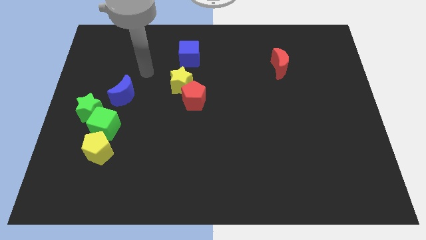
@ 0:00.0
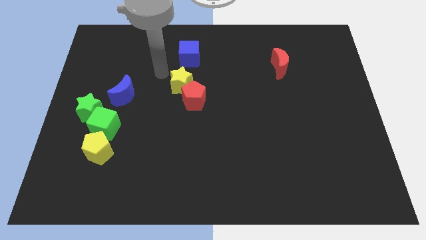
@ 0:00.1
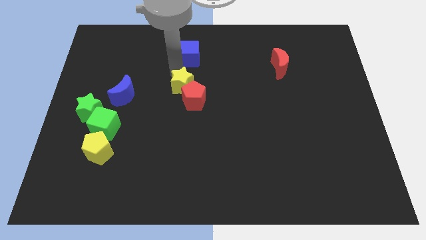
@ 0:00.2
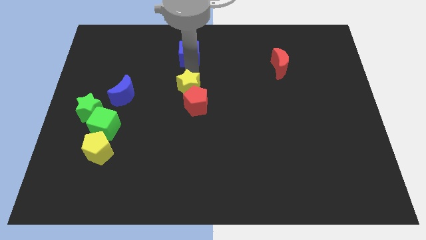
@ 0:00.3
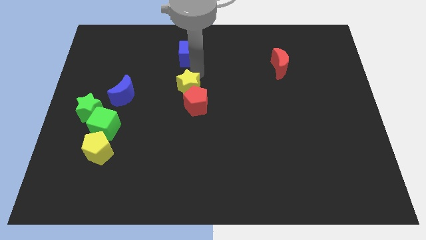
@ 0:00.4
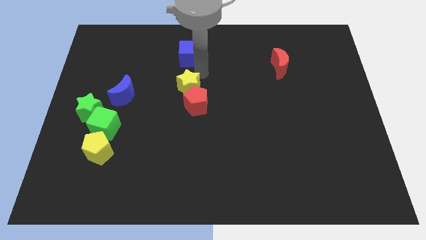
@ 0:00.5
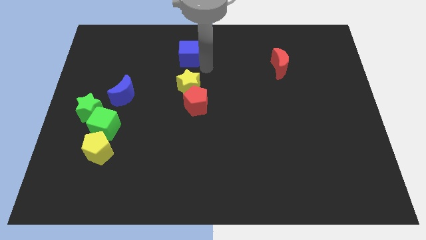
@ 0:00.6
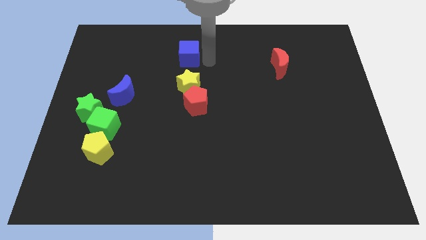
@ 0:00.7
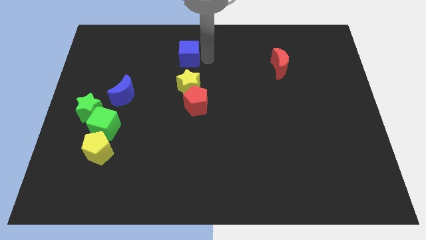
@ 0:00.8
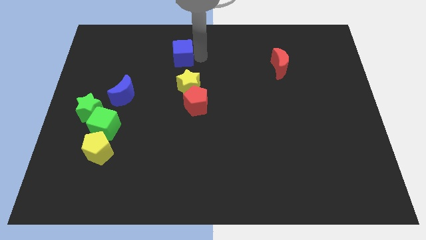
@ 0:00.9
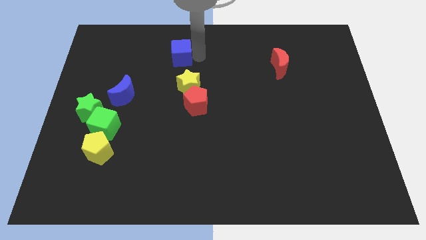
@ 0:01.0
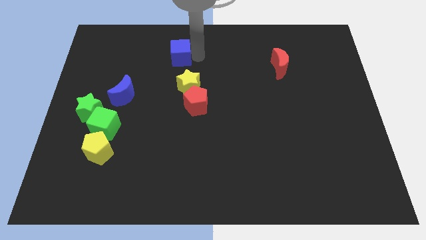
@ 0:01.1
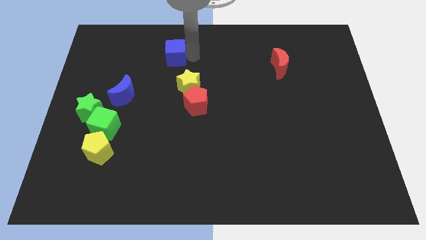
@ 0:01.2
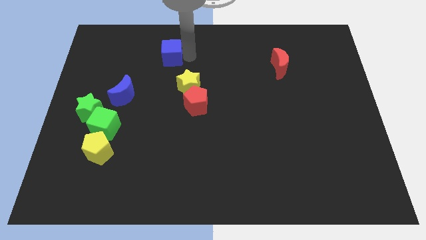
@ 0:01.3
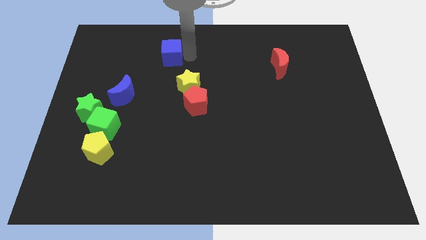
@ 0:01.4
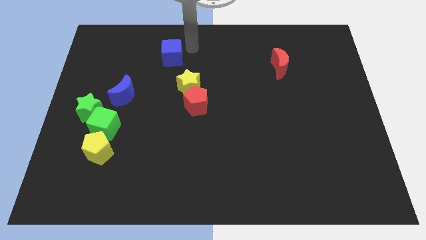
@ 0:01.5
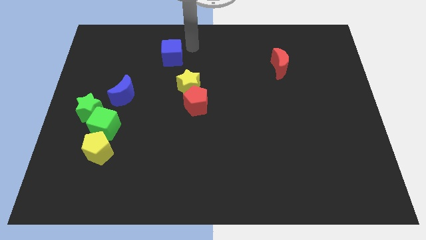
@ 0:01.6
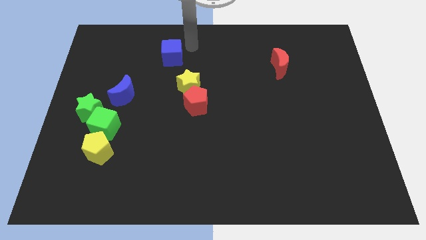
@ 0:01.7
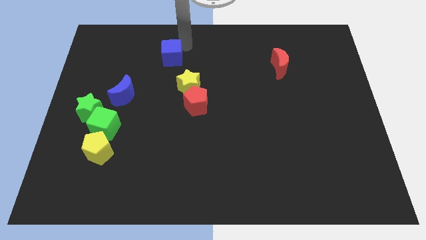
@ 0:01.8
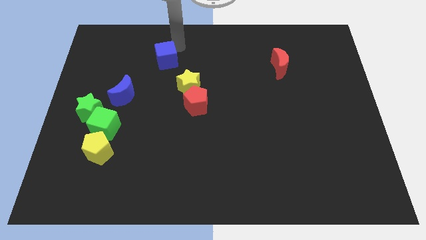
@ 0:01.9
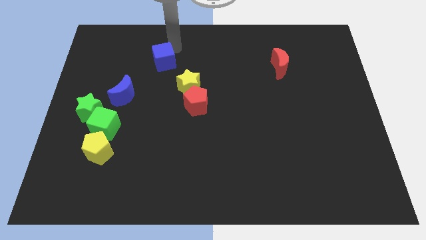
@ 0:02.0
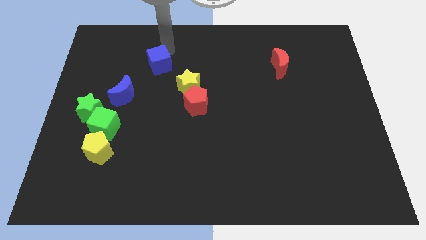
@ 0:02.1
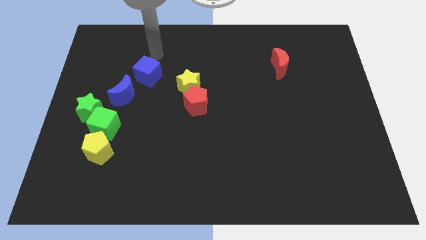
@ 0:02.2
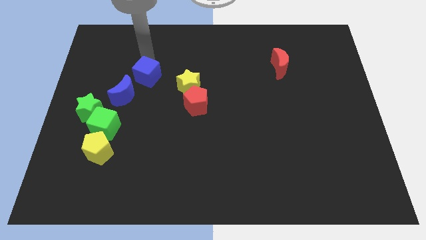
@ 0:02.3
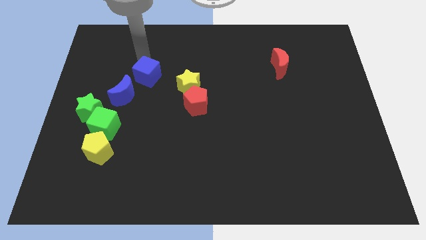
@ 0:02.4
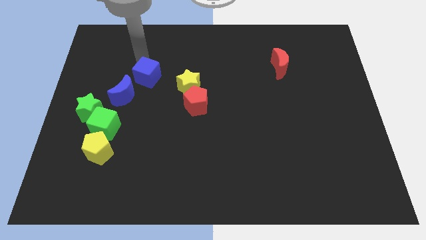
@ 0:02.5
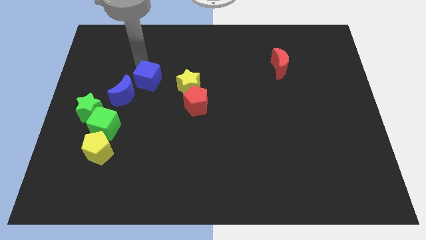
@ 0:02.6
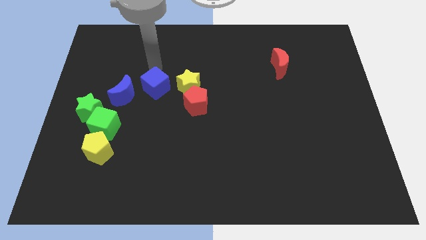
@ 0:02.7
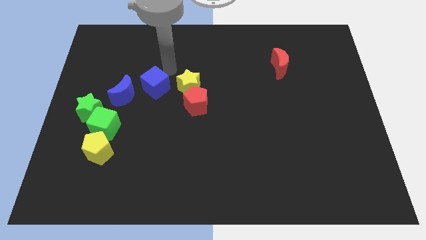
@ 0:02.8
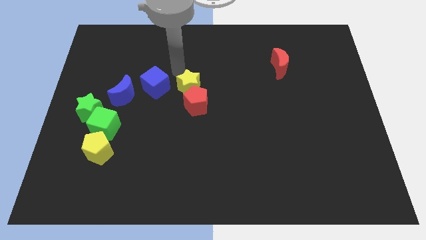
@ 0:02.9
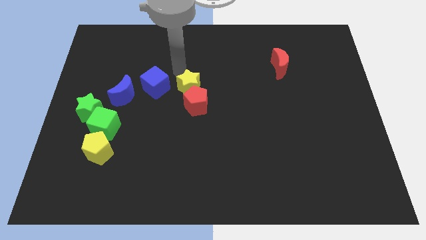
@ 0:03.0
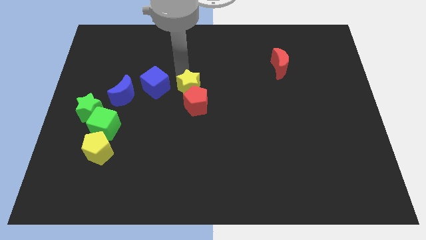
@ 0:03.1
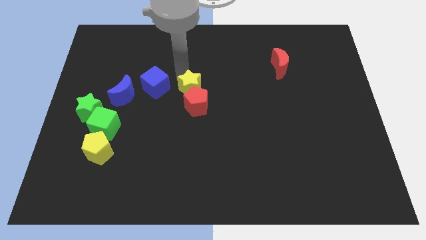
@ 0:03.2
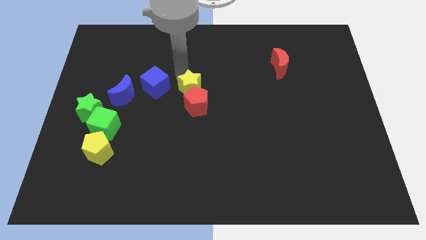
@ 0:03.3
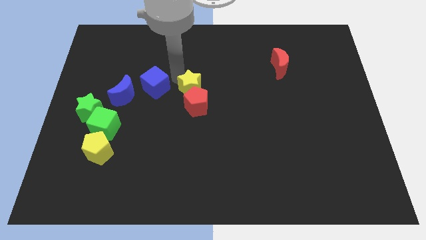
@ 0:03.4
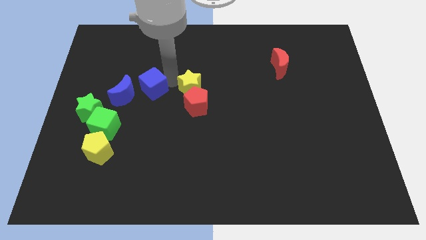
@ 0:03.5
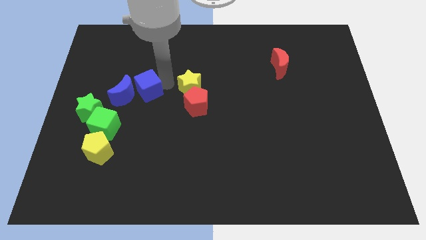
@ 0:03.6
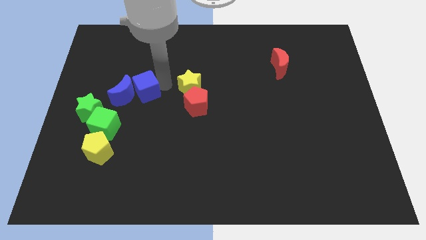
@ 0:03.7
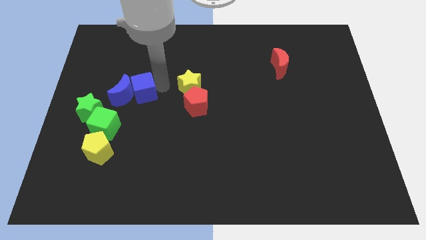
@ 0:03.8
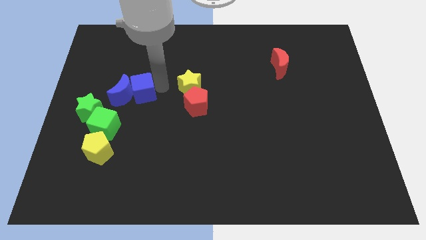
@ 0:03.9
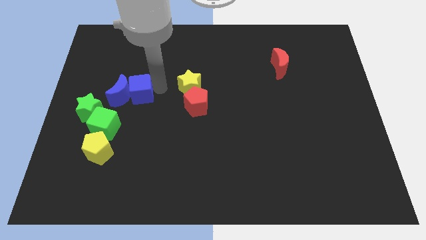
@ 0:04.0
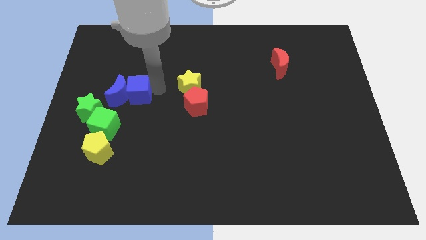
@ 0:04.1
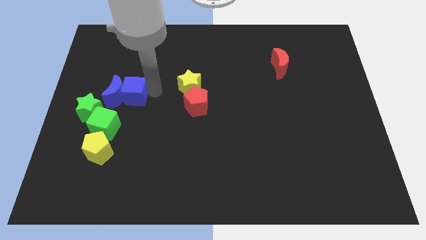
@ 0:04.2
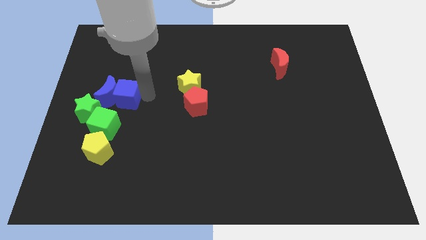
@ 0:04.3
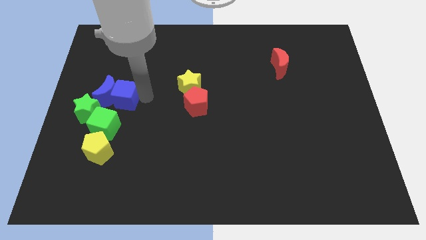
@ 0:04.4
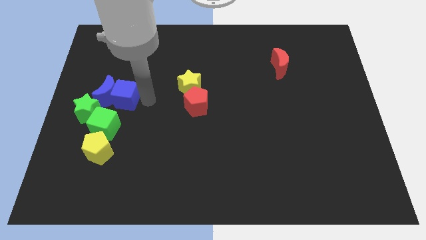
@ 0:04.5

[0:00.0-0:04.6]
push the blue cube into the blue crescent

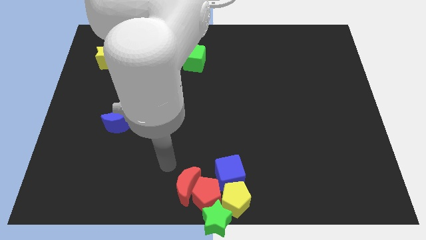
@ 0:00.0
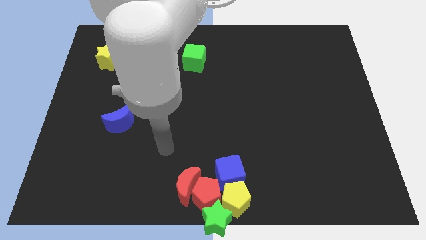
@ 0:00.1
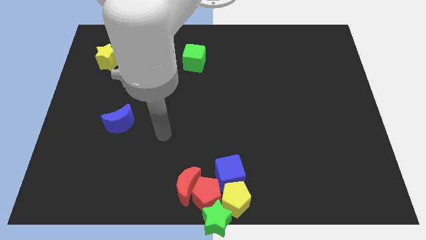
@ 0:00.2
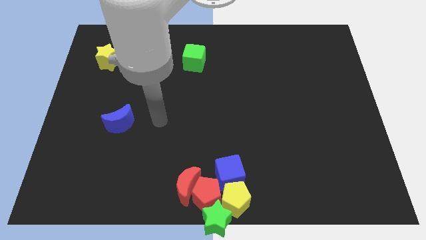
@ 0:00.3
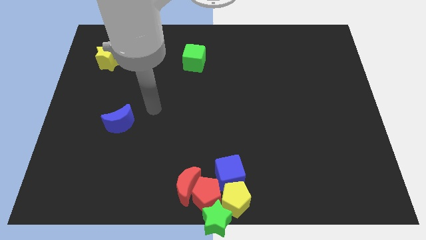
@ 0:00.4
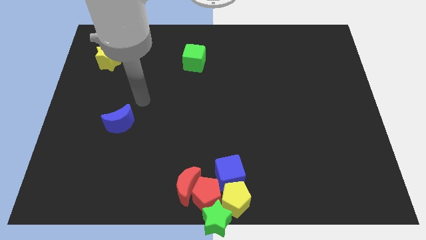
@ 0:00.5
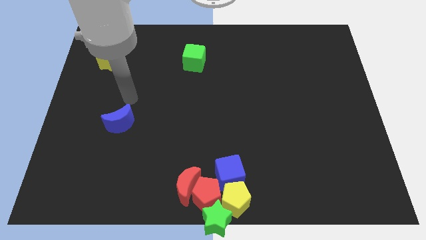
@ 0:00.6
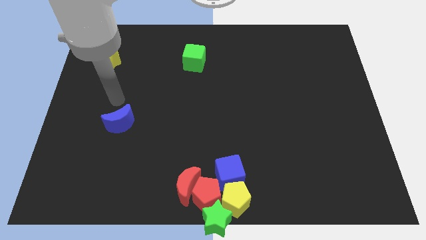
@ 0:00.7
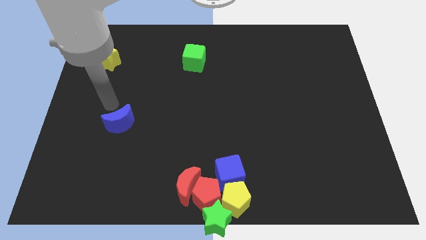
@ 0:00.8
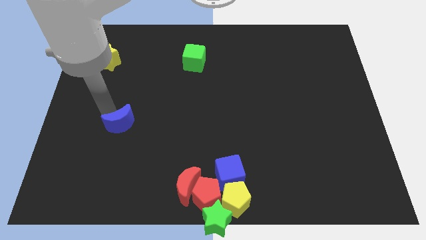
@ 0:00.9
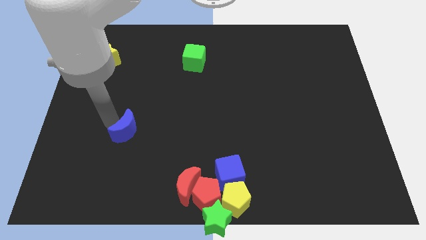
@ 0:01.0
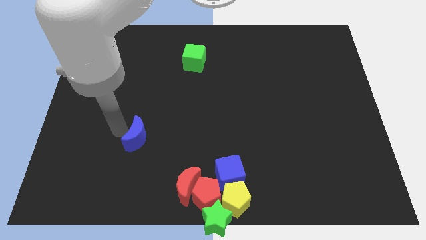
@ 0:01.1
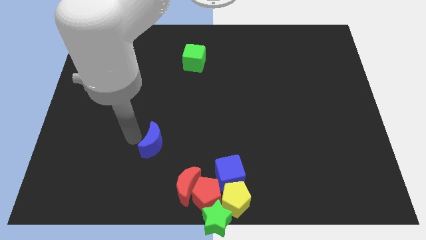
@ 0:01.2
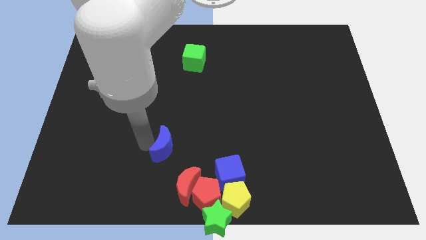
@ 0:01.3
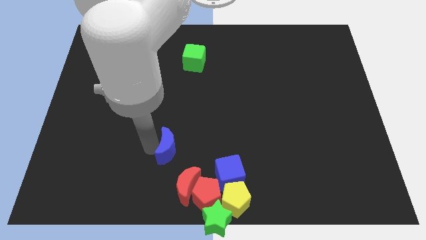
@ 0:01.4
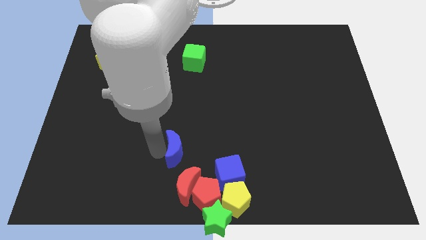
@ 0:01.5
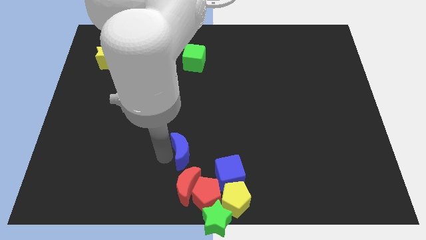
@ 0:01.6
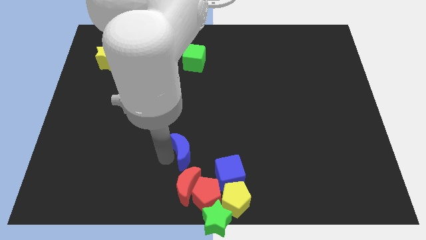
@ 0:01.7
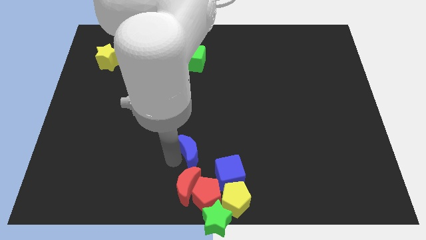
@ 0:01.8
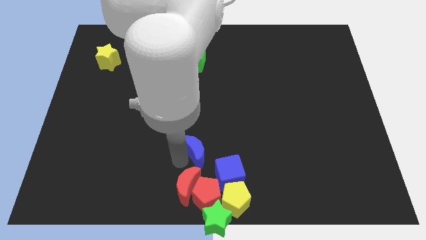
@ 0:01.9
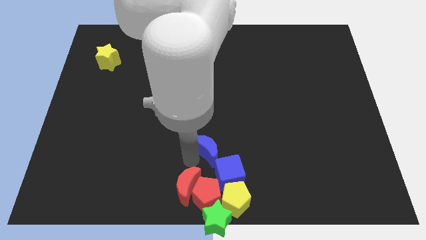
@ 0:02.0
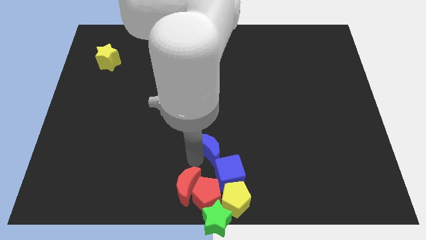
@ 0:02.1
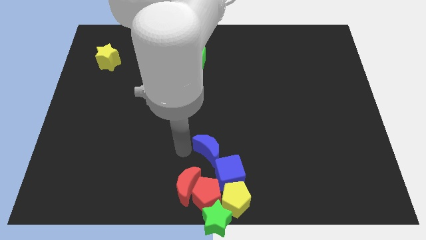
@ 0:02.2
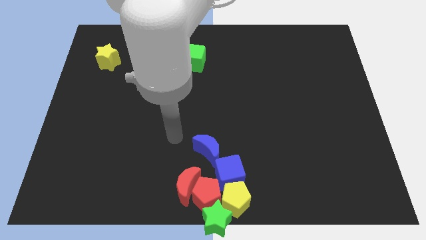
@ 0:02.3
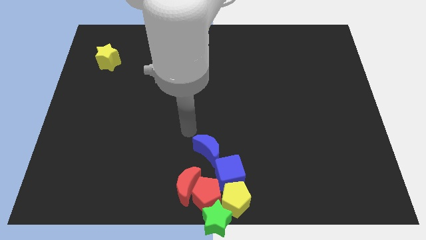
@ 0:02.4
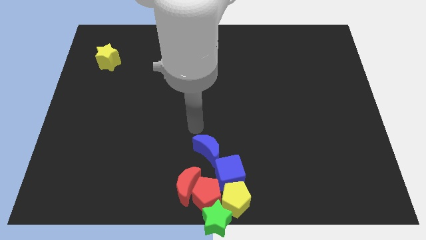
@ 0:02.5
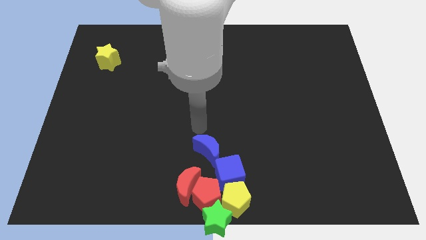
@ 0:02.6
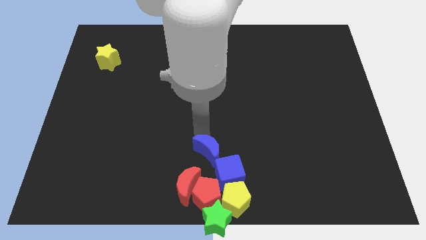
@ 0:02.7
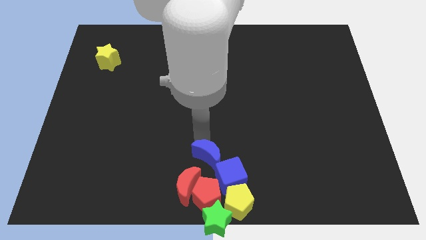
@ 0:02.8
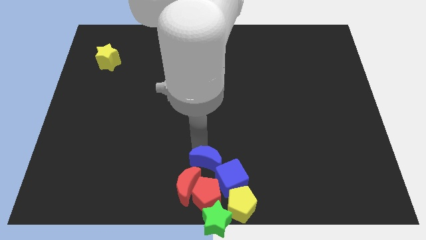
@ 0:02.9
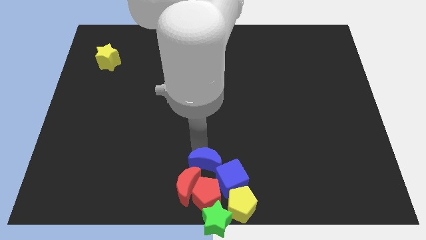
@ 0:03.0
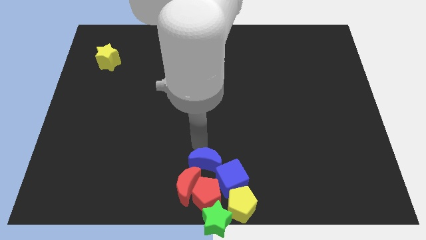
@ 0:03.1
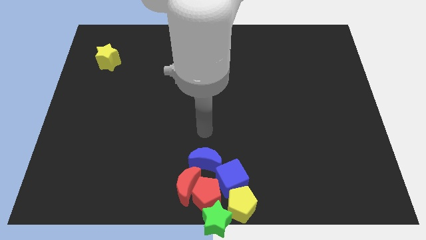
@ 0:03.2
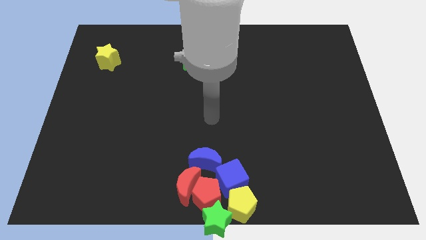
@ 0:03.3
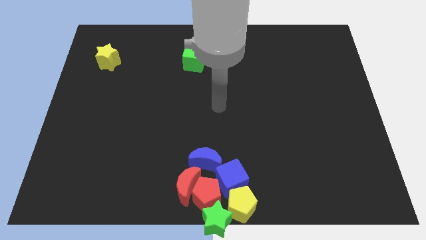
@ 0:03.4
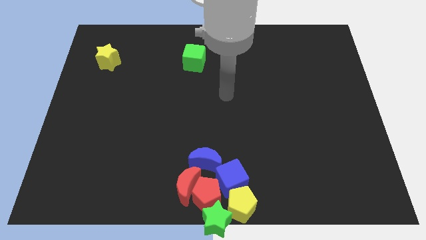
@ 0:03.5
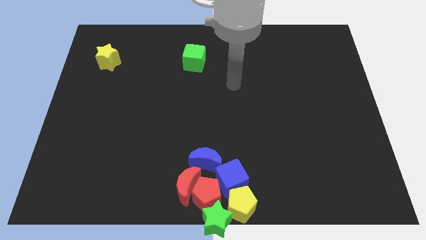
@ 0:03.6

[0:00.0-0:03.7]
push the blue moon into the blue cube

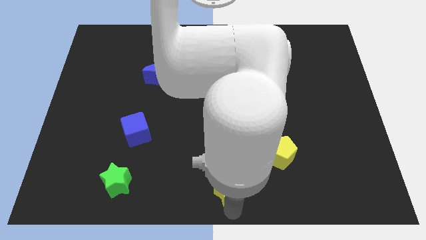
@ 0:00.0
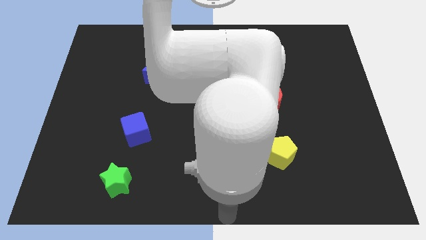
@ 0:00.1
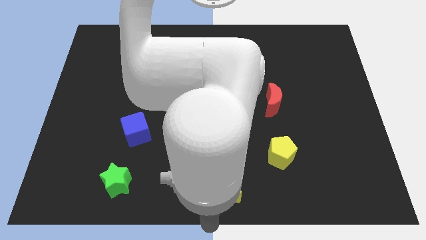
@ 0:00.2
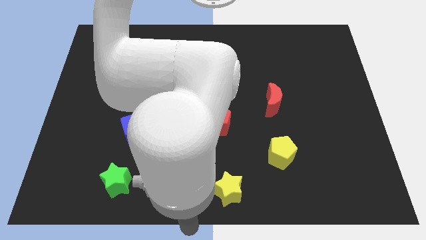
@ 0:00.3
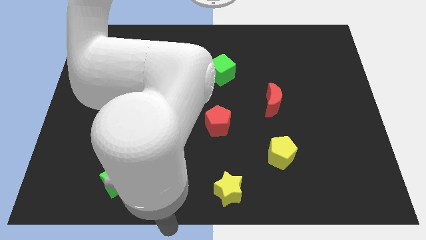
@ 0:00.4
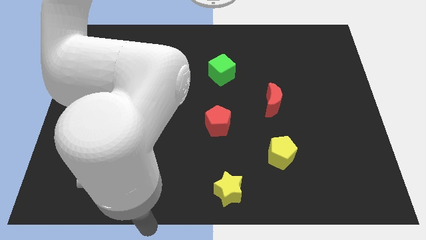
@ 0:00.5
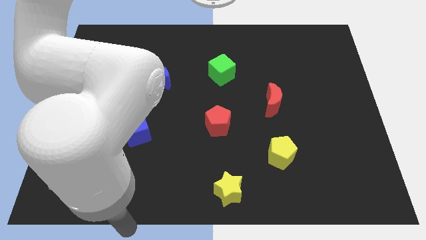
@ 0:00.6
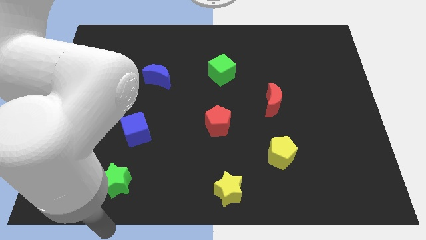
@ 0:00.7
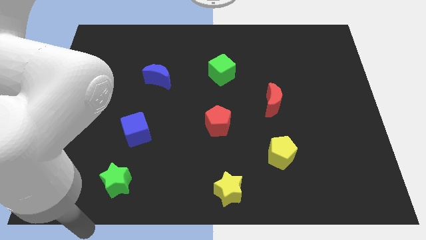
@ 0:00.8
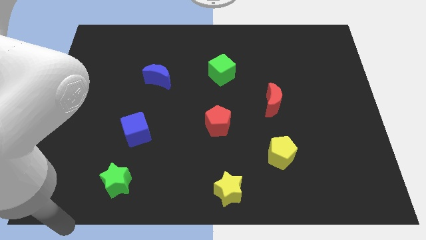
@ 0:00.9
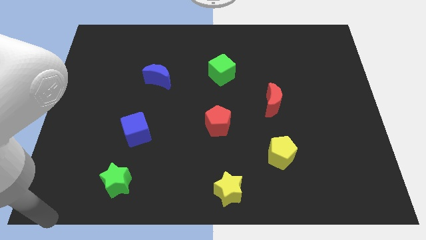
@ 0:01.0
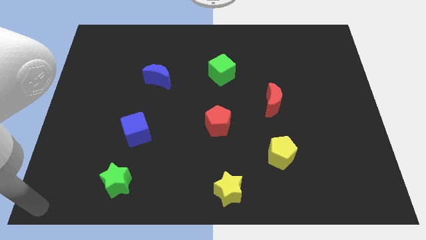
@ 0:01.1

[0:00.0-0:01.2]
move the arm to the bottom left corner of the board
